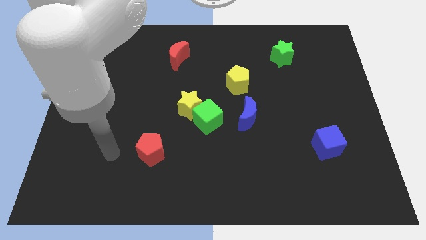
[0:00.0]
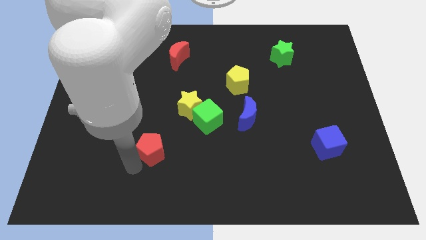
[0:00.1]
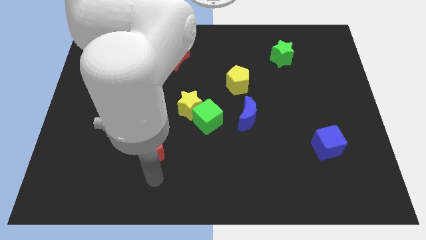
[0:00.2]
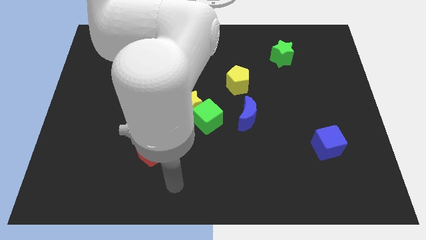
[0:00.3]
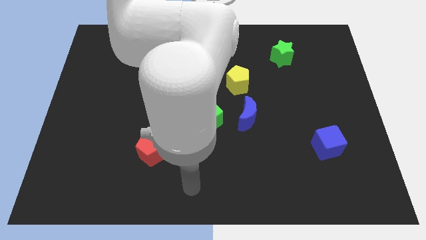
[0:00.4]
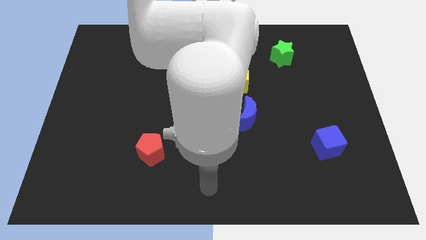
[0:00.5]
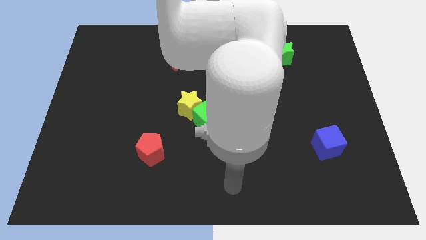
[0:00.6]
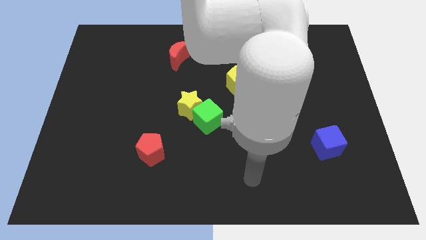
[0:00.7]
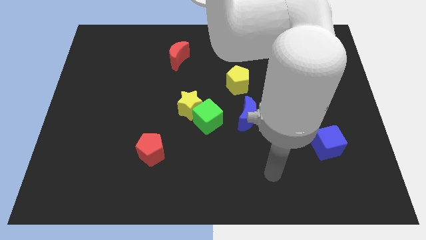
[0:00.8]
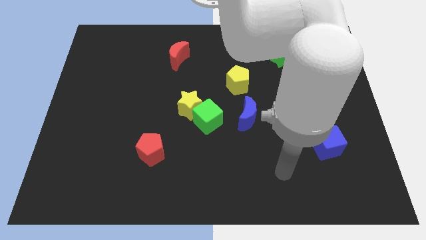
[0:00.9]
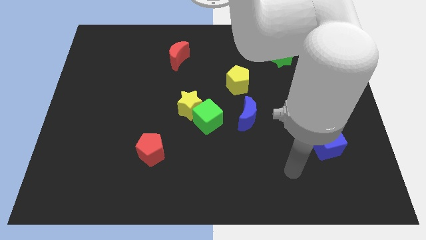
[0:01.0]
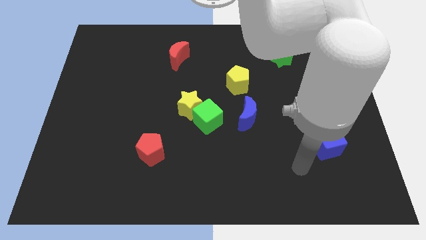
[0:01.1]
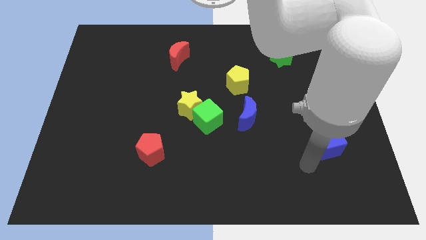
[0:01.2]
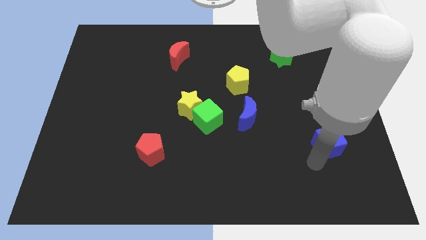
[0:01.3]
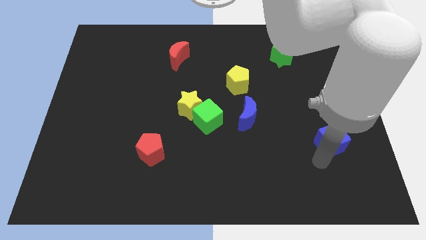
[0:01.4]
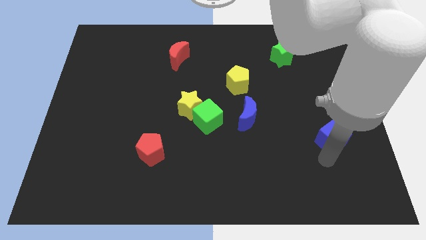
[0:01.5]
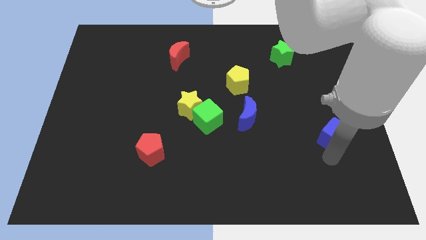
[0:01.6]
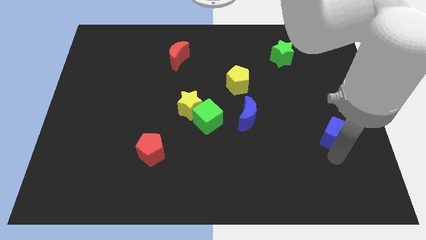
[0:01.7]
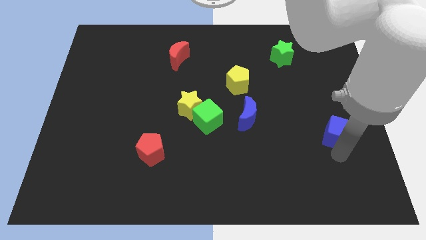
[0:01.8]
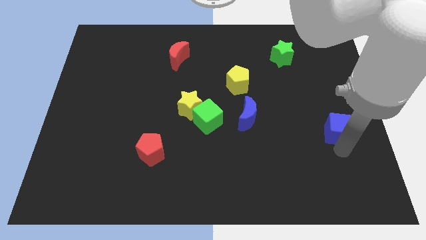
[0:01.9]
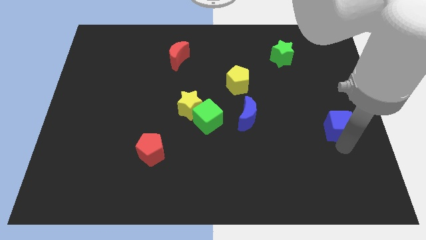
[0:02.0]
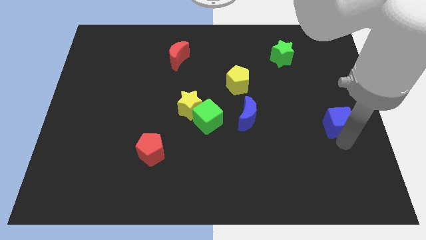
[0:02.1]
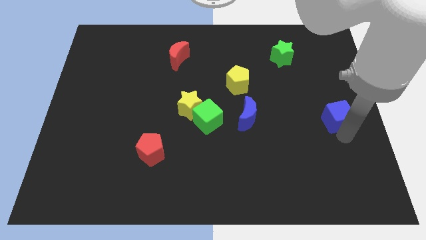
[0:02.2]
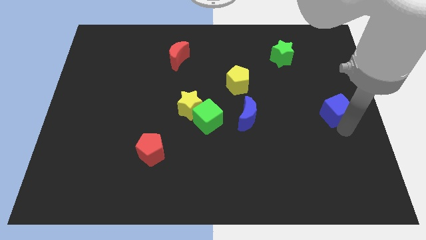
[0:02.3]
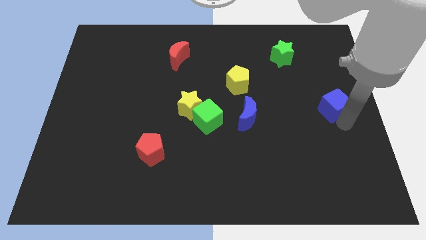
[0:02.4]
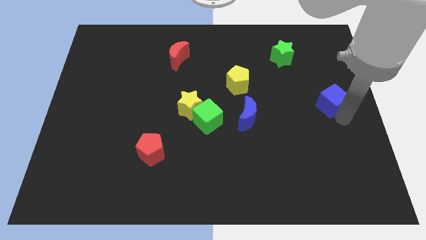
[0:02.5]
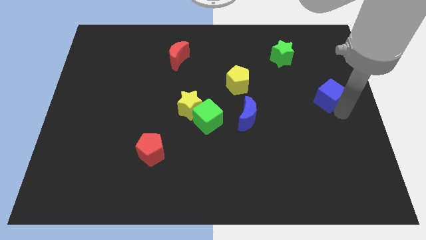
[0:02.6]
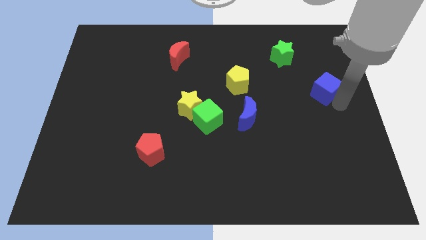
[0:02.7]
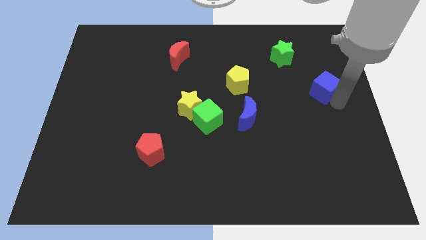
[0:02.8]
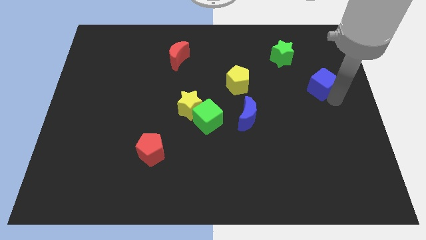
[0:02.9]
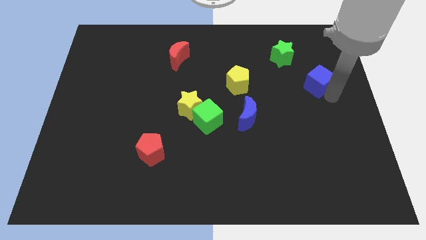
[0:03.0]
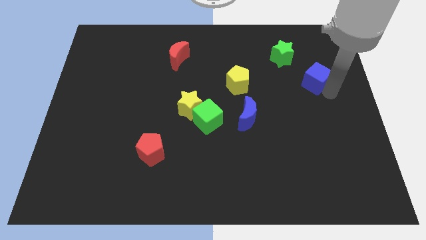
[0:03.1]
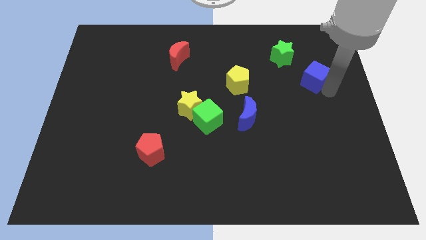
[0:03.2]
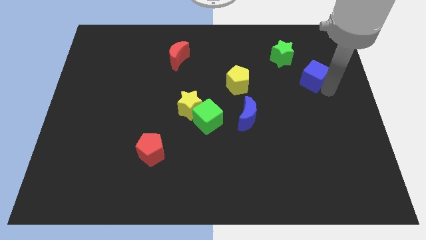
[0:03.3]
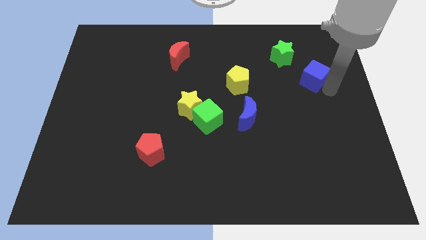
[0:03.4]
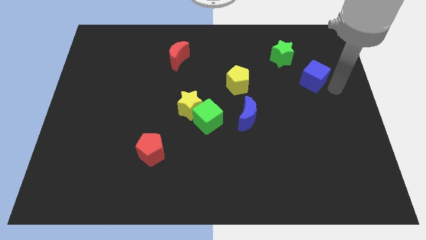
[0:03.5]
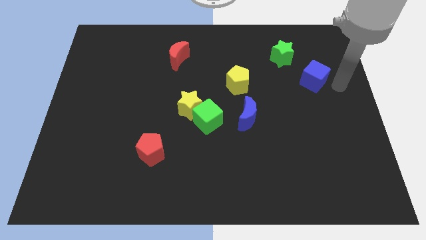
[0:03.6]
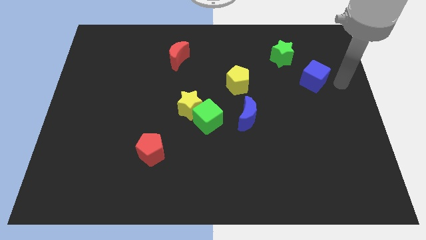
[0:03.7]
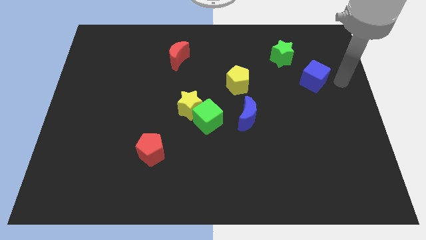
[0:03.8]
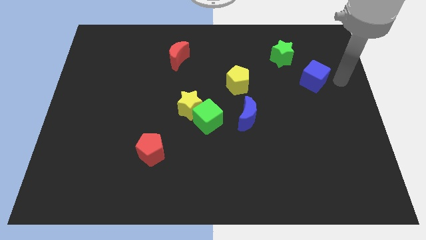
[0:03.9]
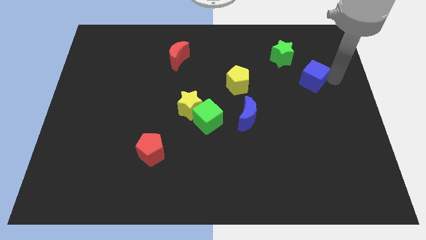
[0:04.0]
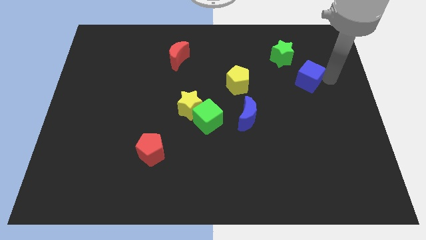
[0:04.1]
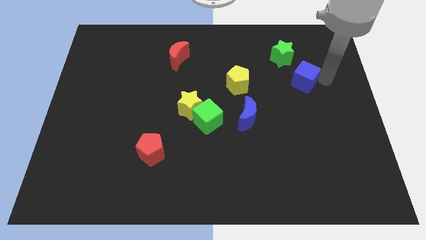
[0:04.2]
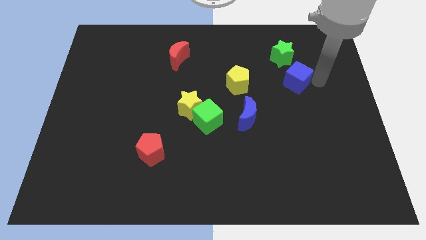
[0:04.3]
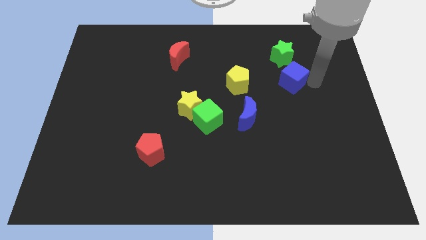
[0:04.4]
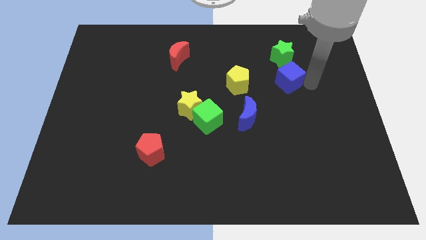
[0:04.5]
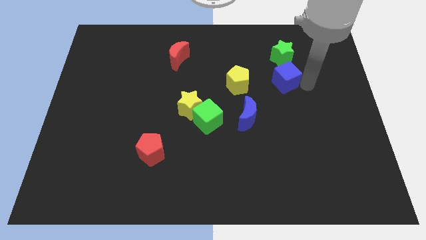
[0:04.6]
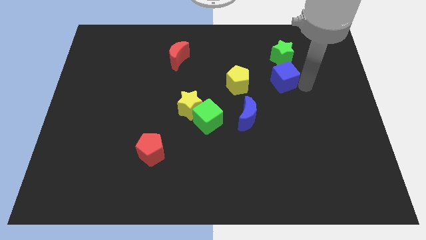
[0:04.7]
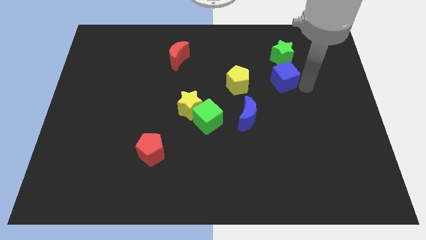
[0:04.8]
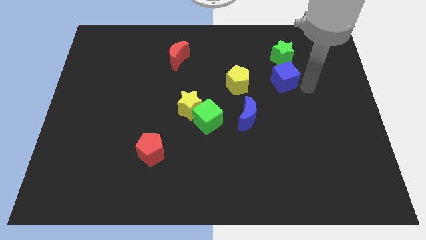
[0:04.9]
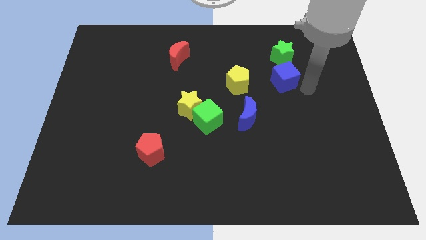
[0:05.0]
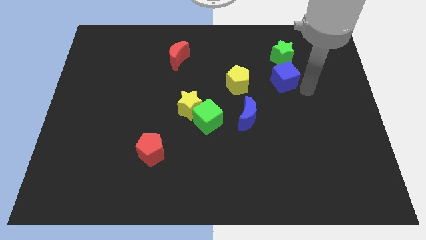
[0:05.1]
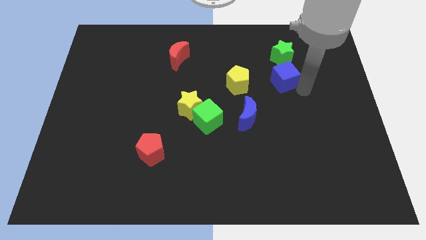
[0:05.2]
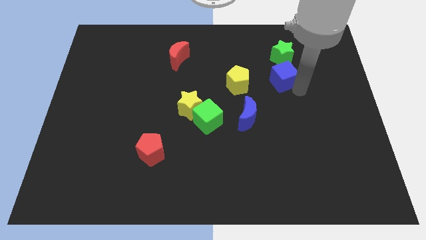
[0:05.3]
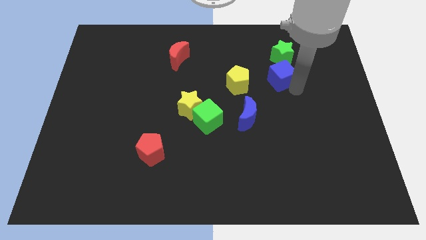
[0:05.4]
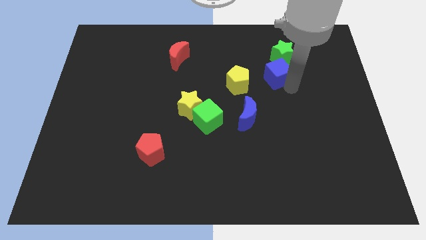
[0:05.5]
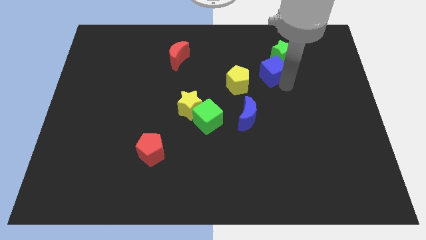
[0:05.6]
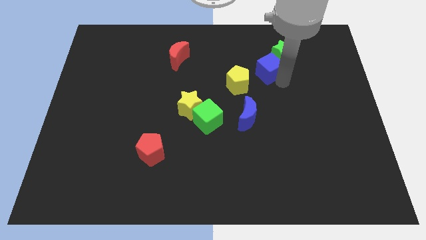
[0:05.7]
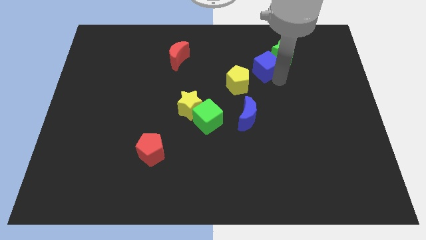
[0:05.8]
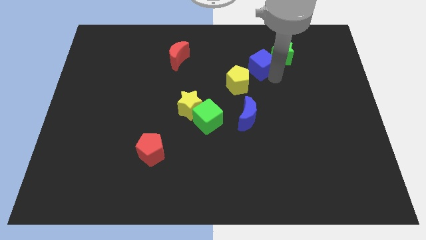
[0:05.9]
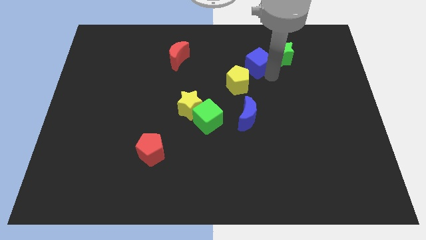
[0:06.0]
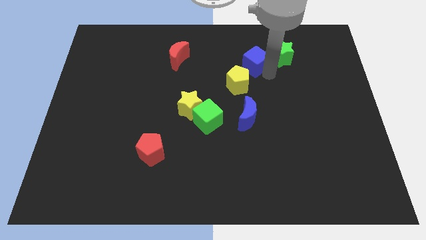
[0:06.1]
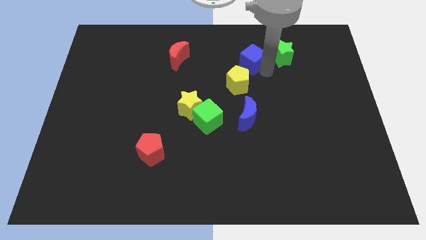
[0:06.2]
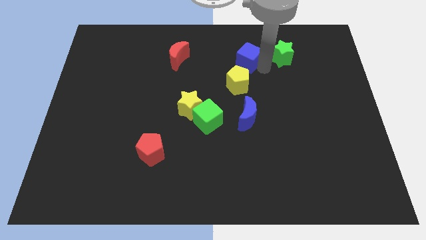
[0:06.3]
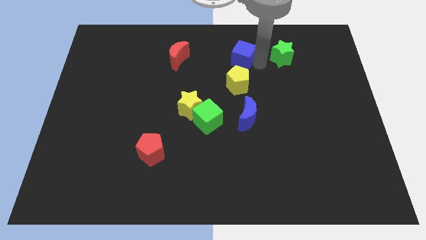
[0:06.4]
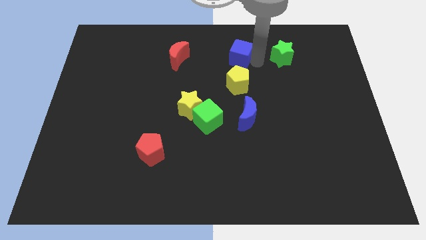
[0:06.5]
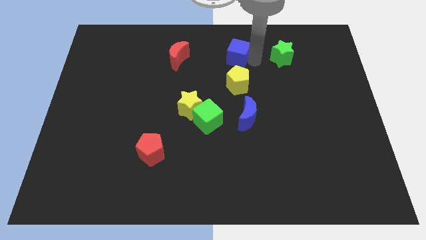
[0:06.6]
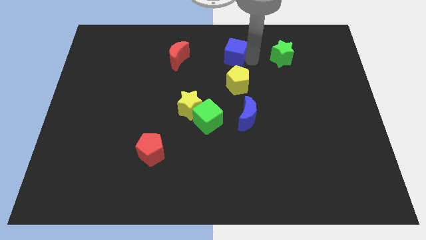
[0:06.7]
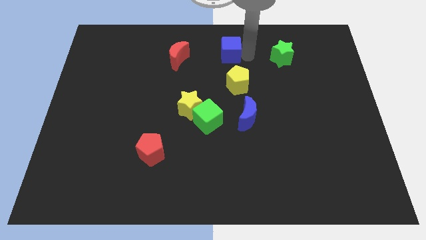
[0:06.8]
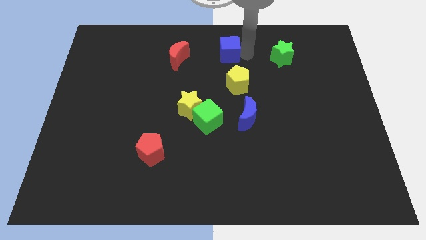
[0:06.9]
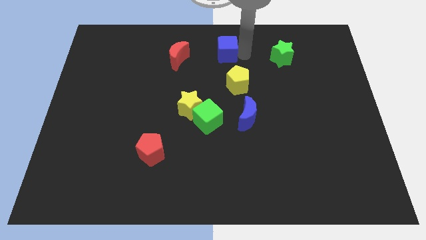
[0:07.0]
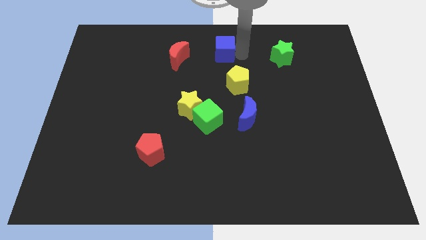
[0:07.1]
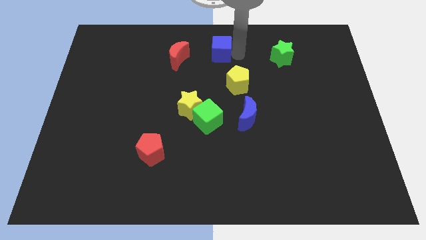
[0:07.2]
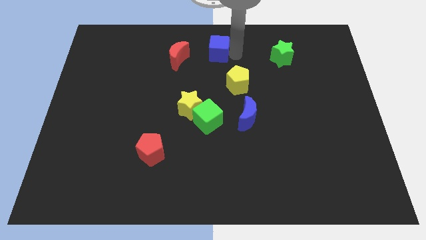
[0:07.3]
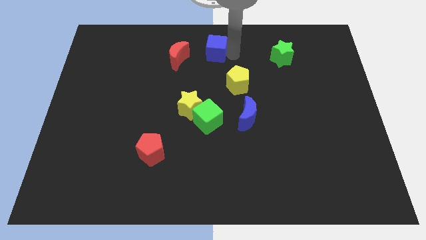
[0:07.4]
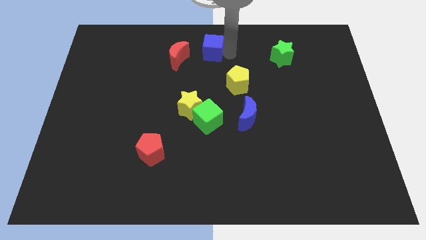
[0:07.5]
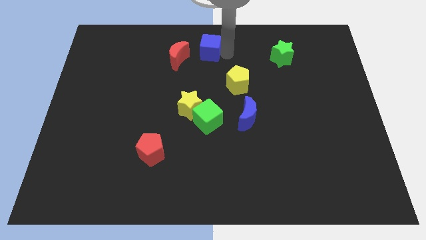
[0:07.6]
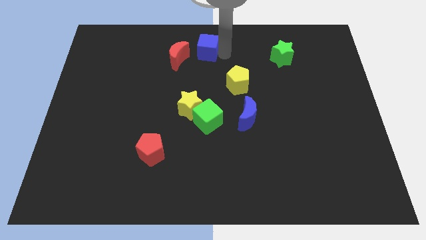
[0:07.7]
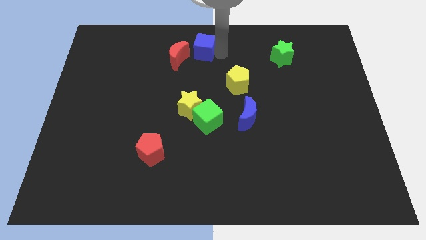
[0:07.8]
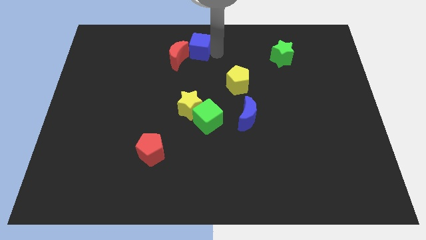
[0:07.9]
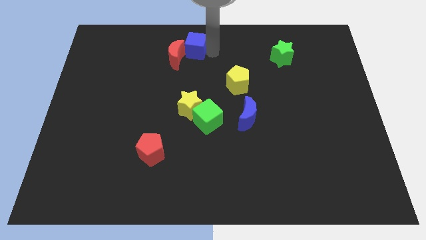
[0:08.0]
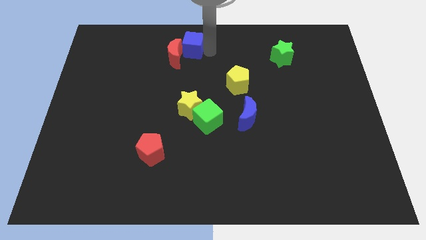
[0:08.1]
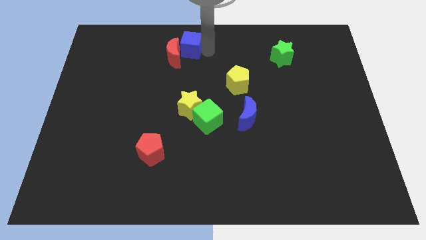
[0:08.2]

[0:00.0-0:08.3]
put the blue cube next to the red moon
